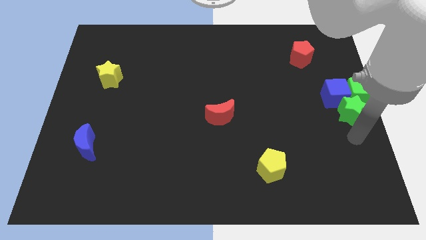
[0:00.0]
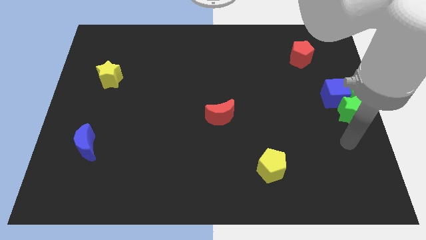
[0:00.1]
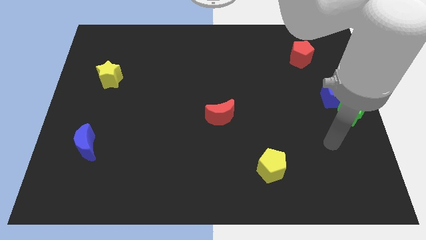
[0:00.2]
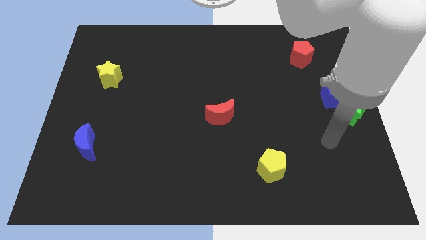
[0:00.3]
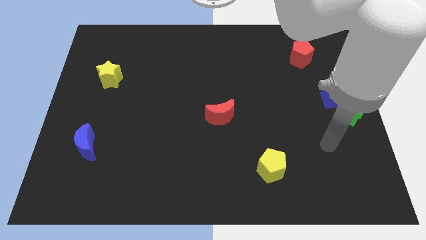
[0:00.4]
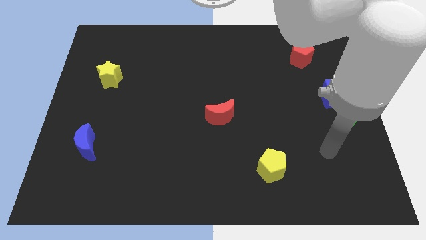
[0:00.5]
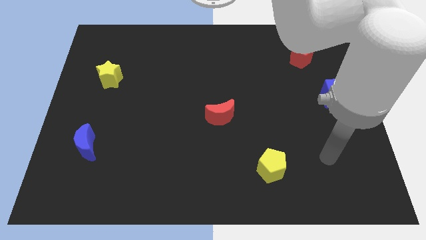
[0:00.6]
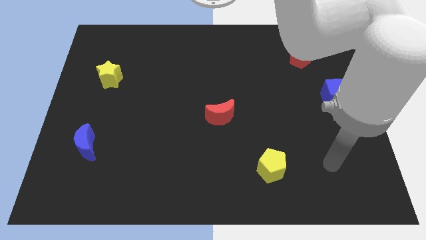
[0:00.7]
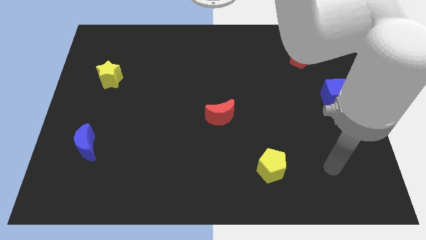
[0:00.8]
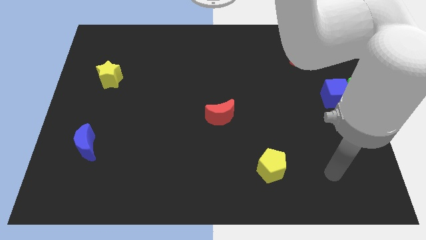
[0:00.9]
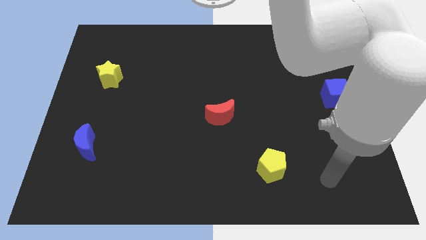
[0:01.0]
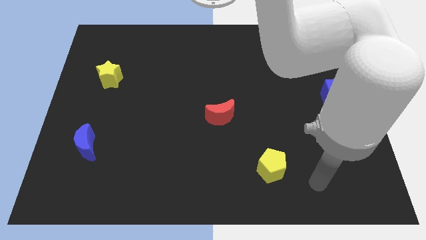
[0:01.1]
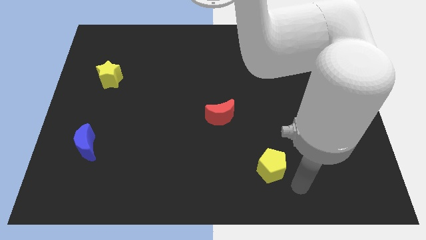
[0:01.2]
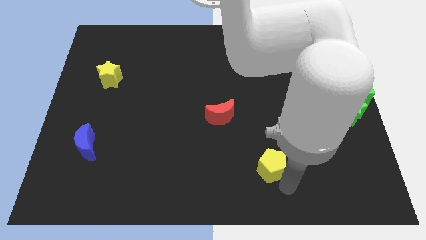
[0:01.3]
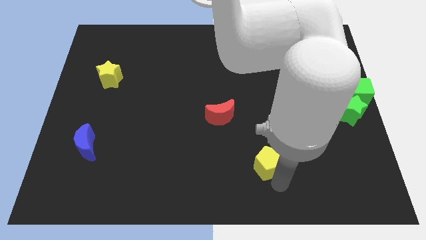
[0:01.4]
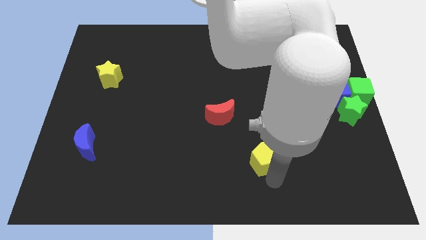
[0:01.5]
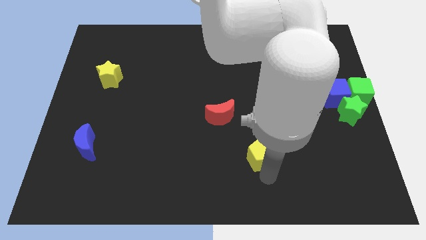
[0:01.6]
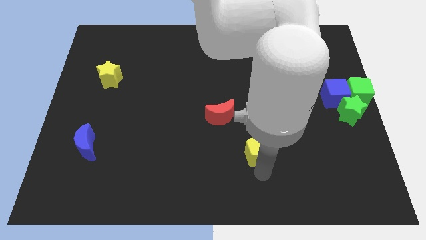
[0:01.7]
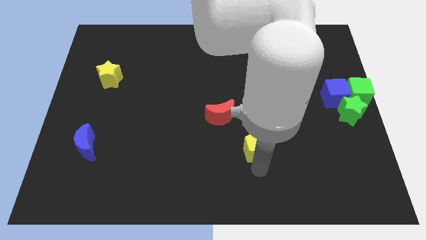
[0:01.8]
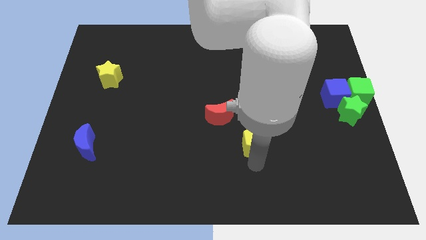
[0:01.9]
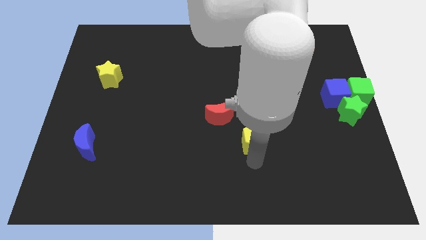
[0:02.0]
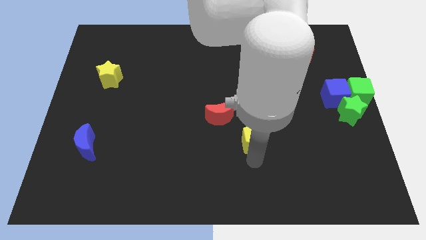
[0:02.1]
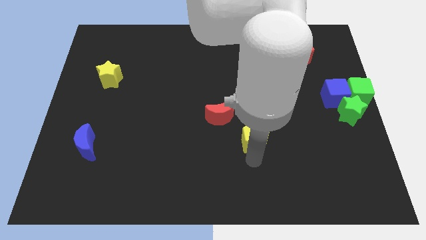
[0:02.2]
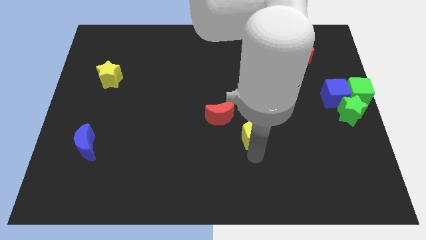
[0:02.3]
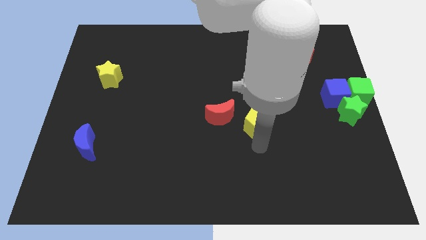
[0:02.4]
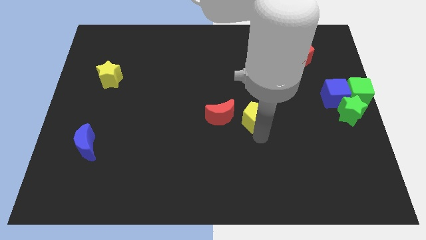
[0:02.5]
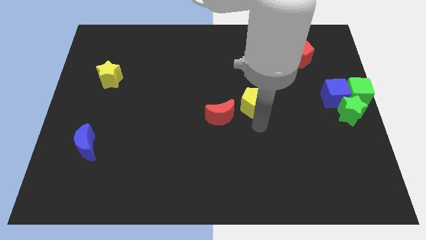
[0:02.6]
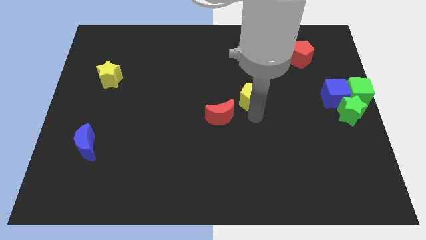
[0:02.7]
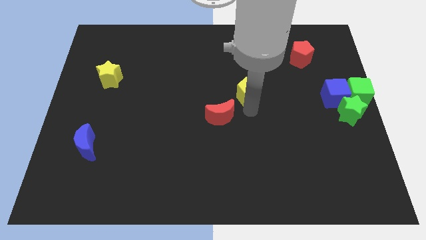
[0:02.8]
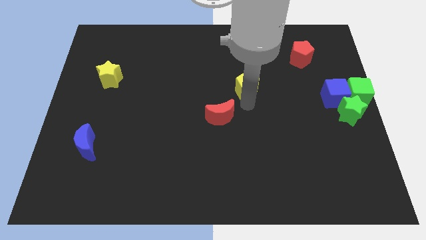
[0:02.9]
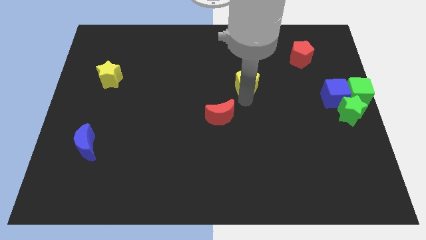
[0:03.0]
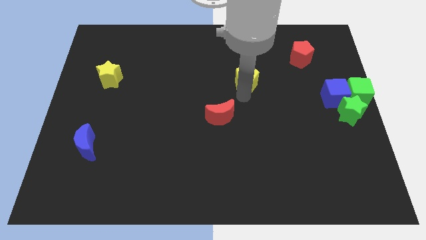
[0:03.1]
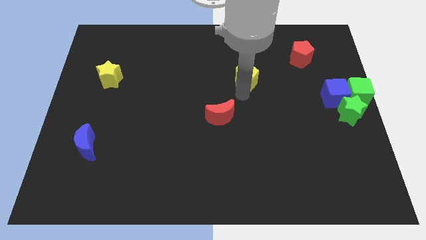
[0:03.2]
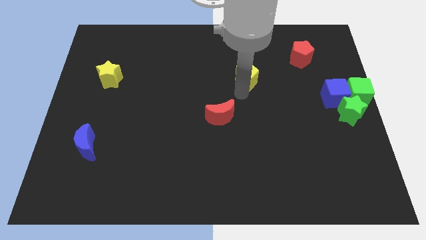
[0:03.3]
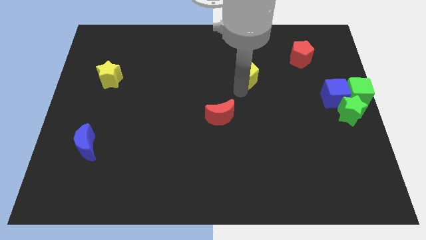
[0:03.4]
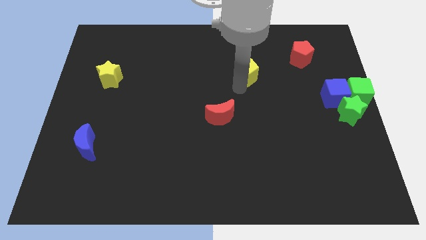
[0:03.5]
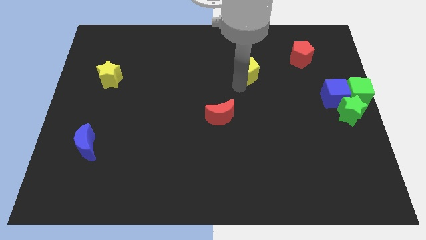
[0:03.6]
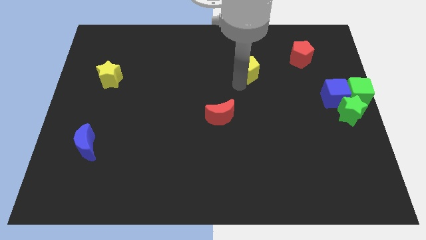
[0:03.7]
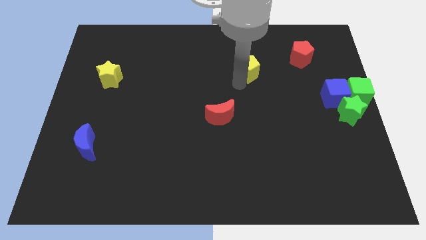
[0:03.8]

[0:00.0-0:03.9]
push the yellow pentagon to the top right of the red crescent

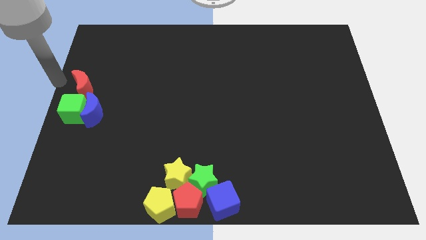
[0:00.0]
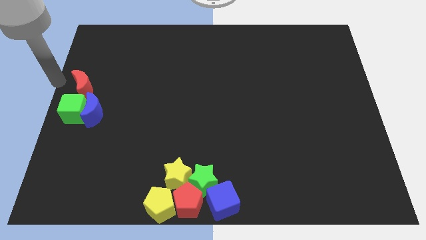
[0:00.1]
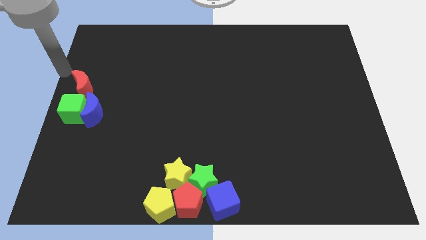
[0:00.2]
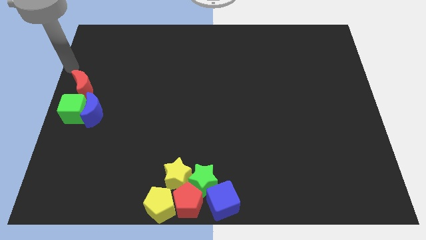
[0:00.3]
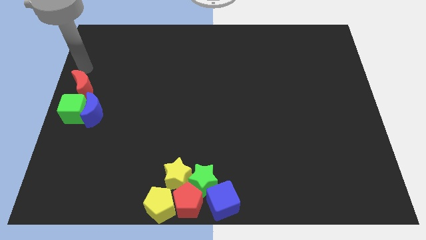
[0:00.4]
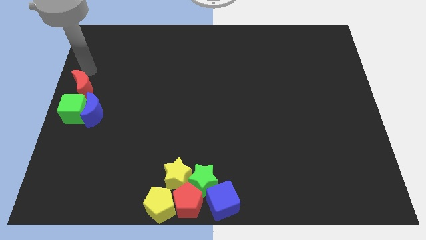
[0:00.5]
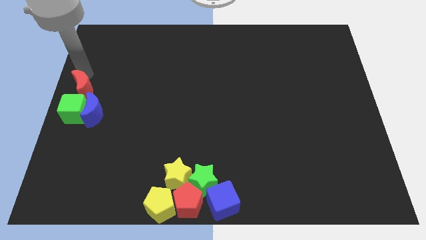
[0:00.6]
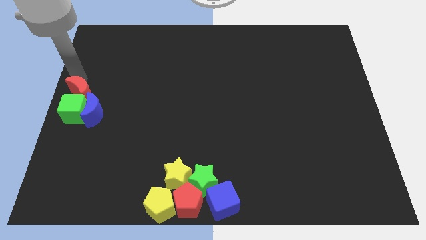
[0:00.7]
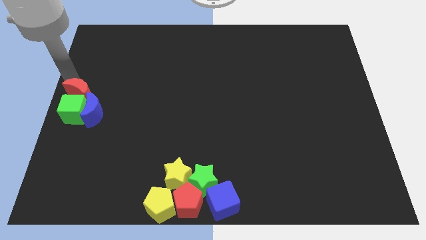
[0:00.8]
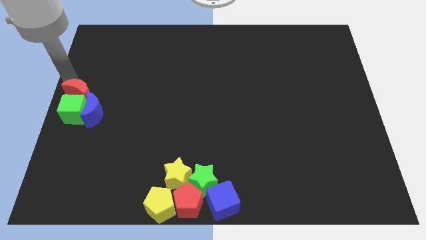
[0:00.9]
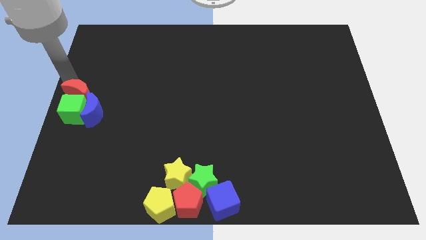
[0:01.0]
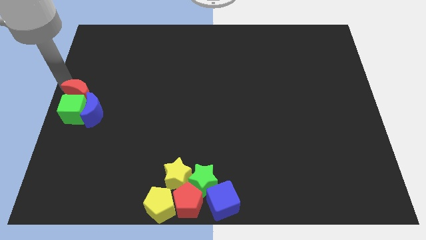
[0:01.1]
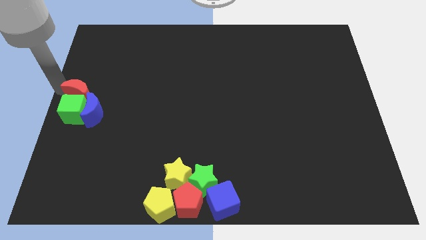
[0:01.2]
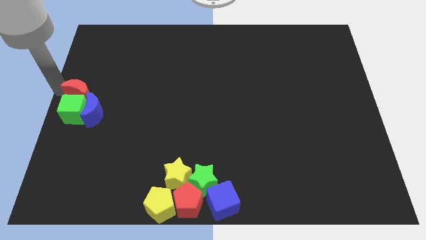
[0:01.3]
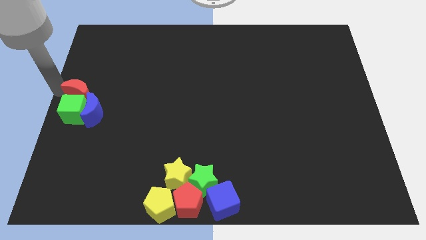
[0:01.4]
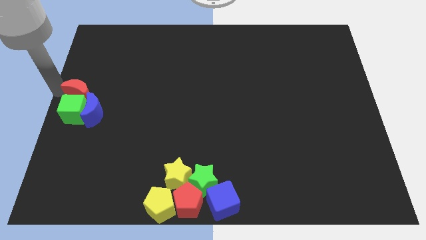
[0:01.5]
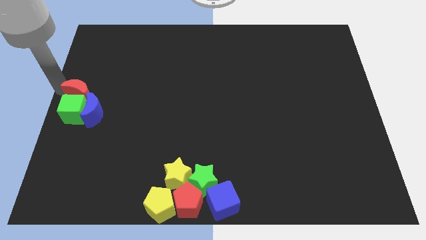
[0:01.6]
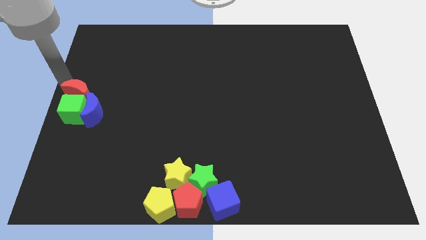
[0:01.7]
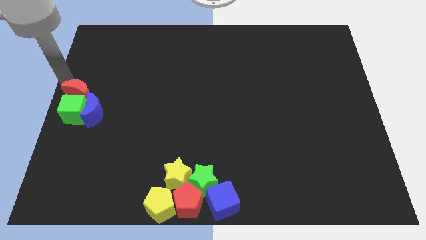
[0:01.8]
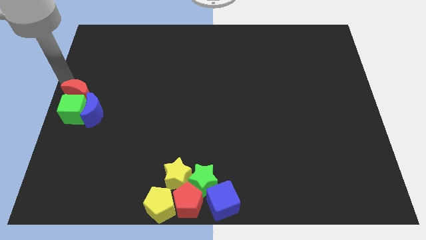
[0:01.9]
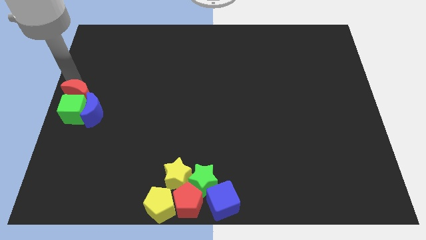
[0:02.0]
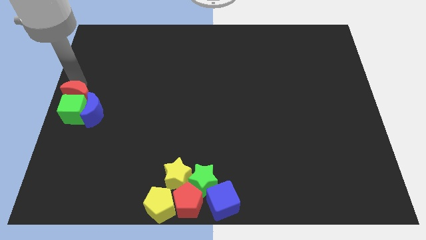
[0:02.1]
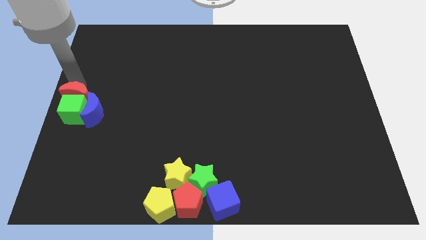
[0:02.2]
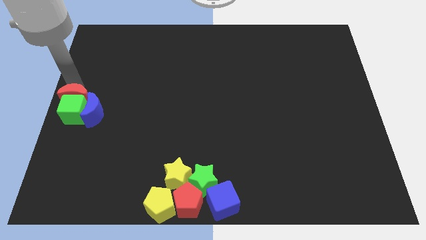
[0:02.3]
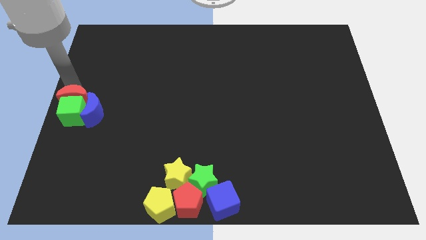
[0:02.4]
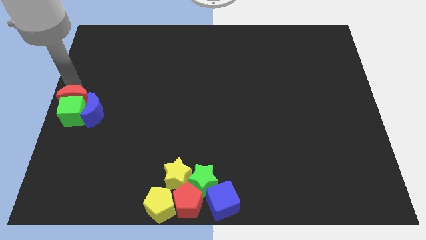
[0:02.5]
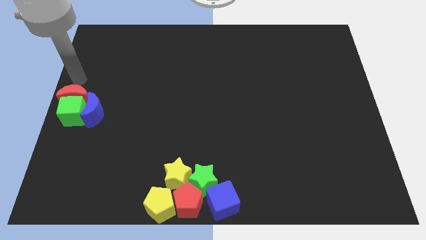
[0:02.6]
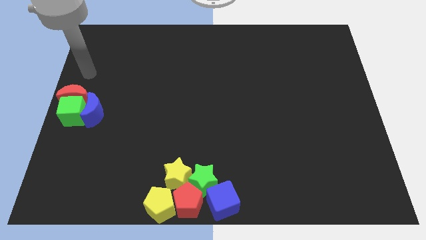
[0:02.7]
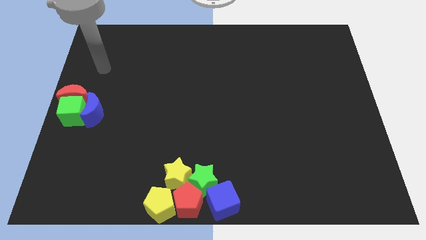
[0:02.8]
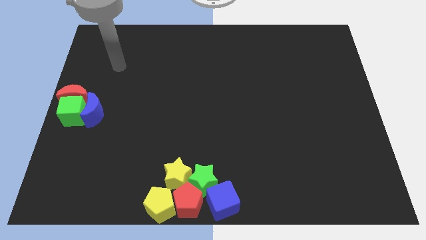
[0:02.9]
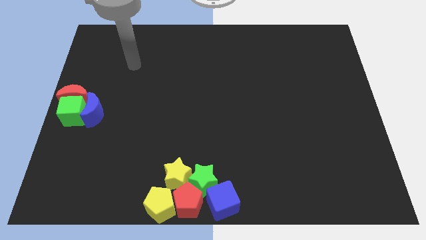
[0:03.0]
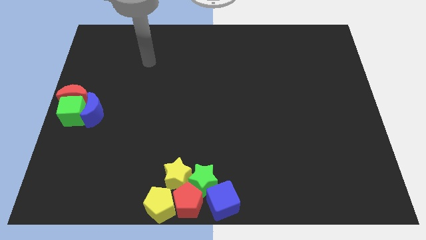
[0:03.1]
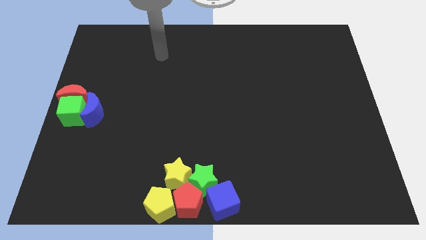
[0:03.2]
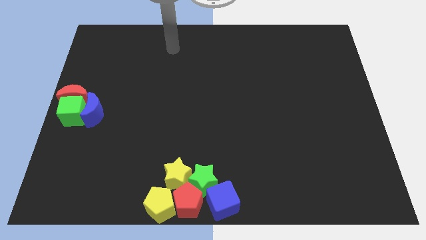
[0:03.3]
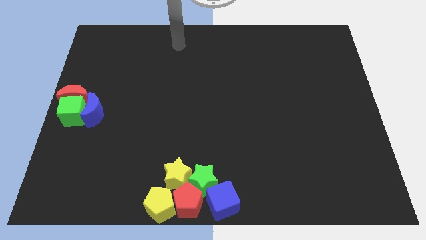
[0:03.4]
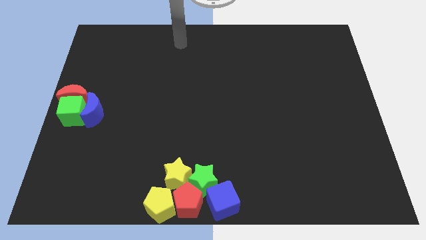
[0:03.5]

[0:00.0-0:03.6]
move arm top middle of the board

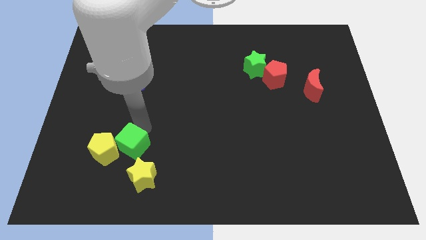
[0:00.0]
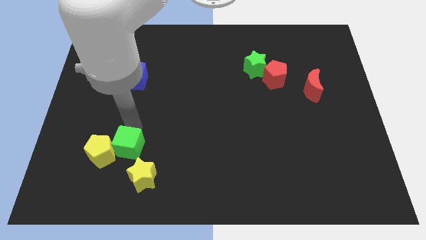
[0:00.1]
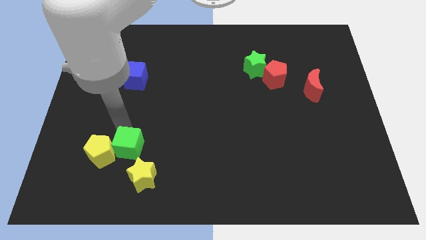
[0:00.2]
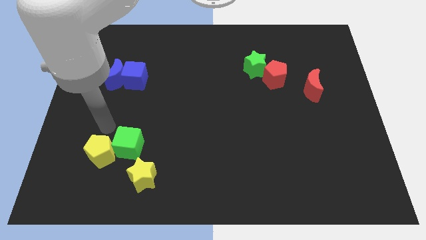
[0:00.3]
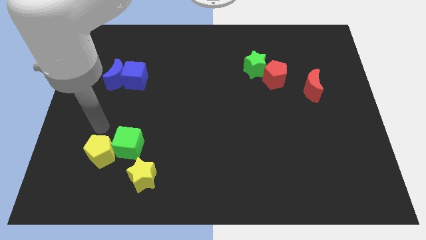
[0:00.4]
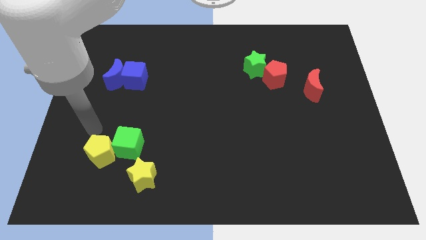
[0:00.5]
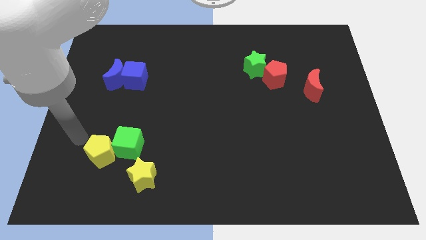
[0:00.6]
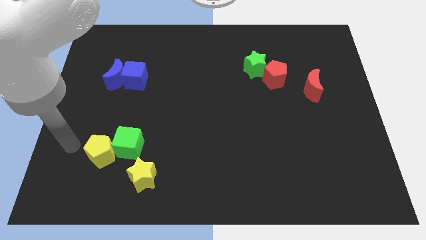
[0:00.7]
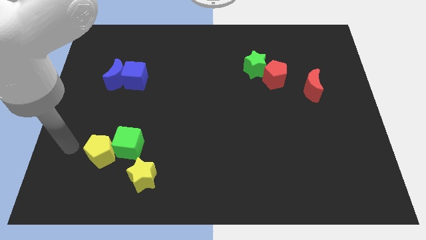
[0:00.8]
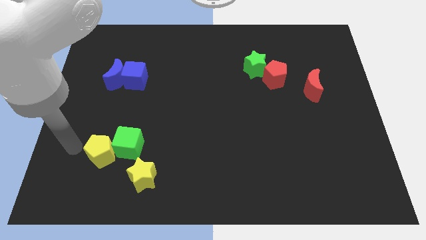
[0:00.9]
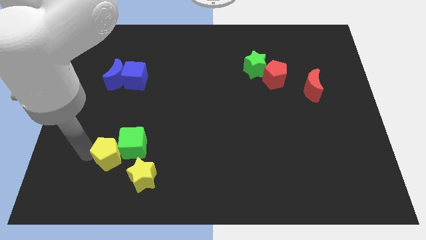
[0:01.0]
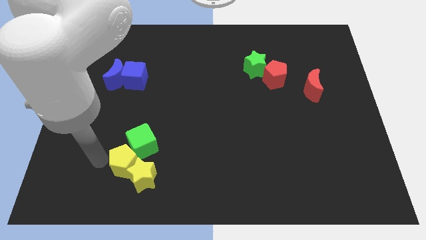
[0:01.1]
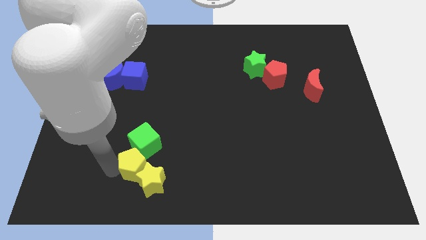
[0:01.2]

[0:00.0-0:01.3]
place green cube and yellow pentagon above green star

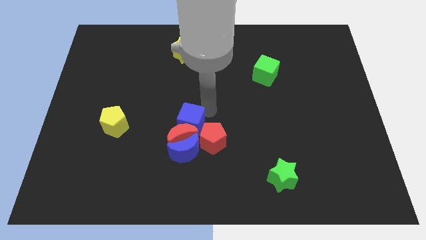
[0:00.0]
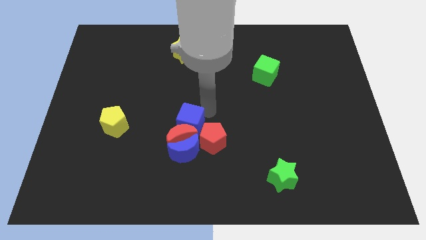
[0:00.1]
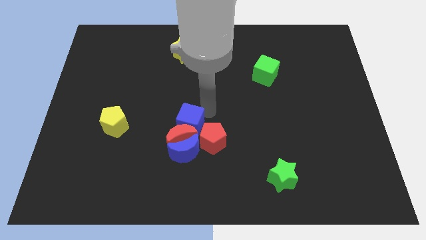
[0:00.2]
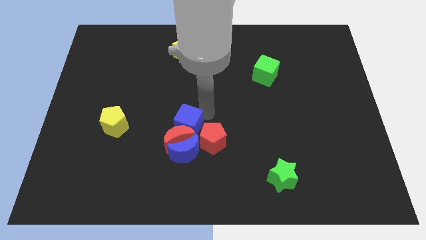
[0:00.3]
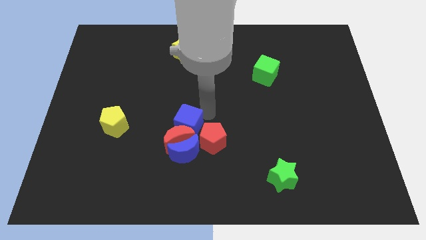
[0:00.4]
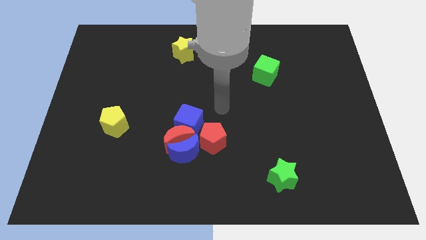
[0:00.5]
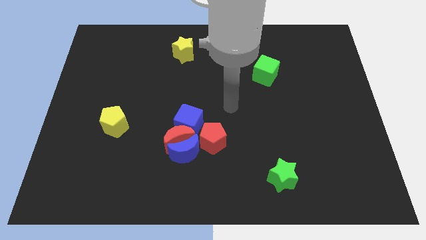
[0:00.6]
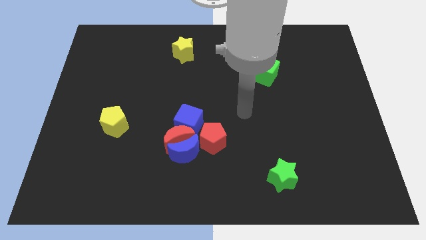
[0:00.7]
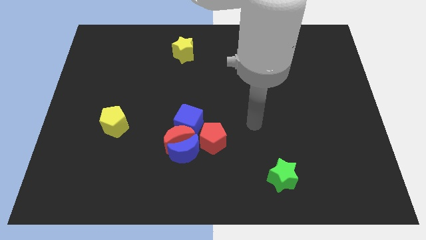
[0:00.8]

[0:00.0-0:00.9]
move your arm away from the blue cube
